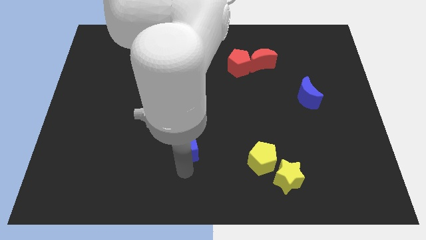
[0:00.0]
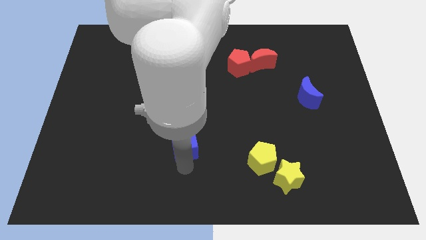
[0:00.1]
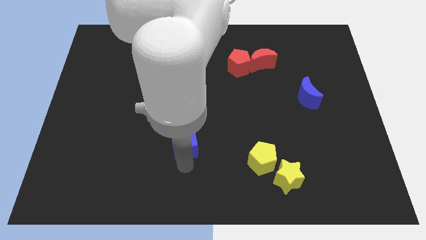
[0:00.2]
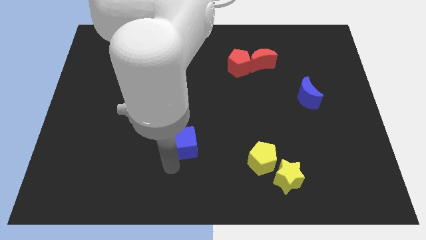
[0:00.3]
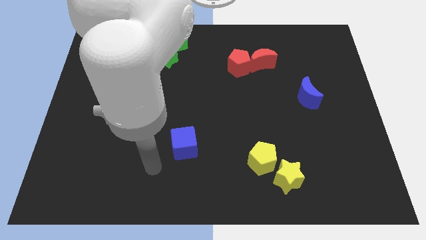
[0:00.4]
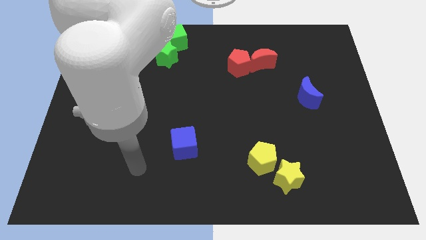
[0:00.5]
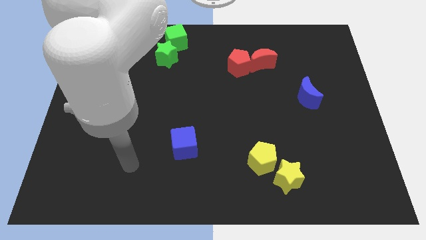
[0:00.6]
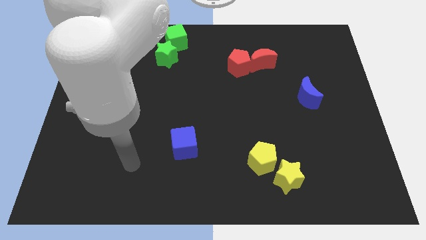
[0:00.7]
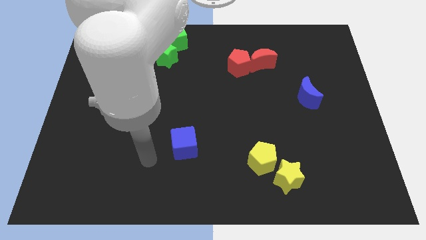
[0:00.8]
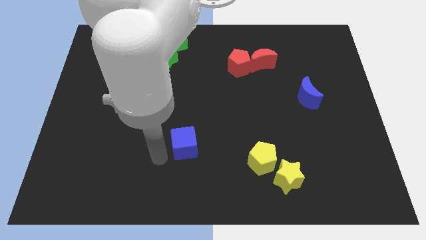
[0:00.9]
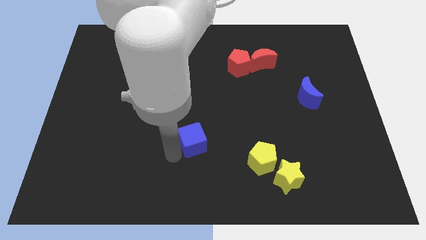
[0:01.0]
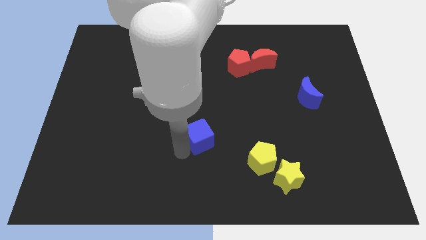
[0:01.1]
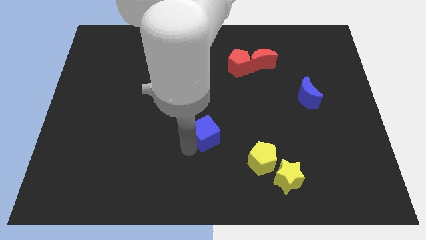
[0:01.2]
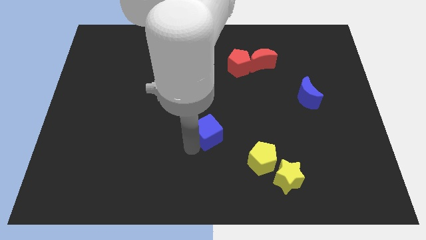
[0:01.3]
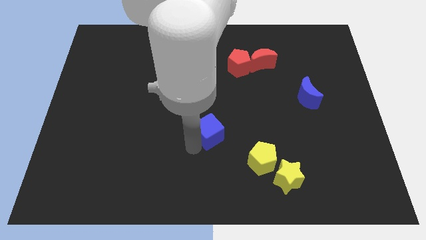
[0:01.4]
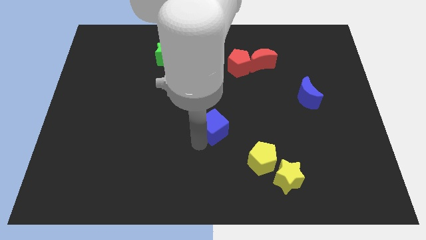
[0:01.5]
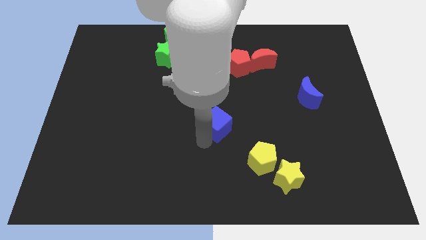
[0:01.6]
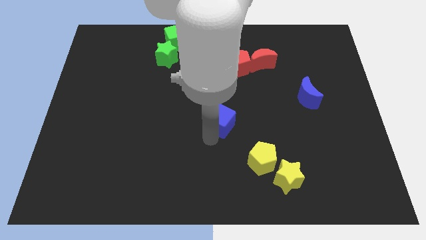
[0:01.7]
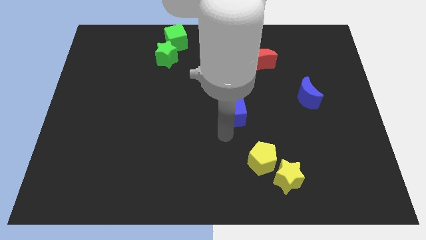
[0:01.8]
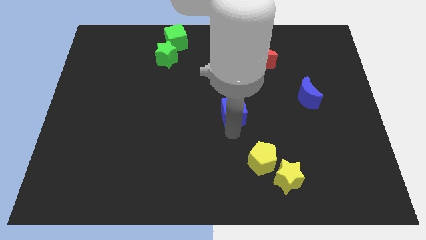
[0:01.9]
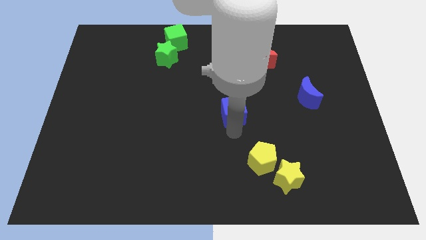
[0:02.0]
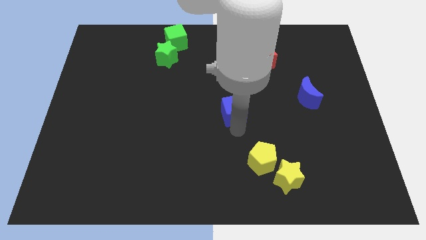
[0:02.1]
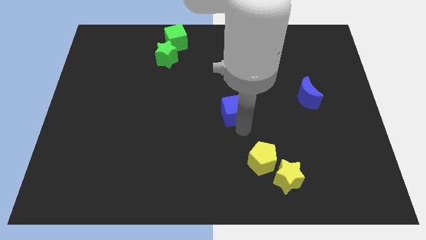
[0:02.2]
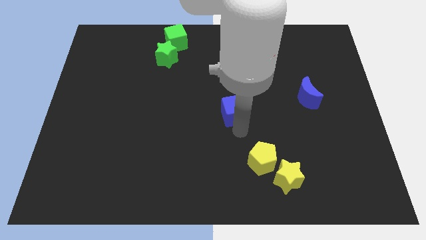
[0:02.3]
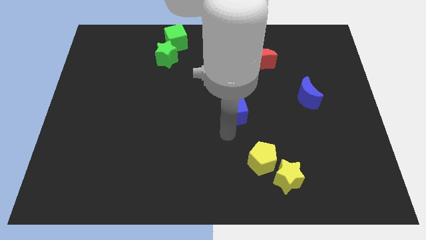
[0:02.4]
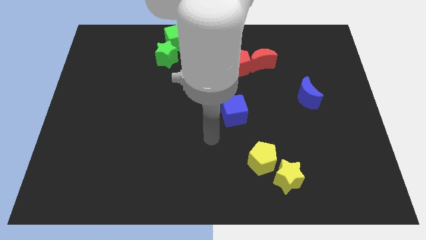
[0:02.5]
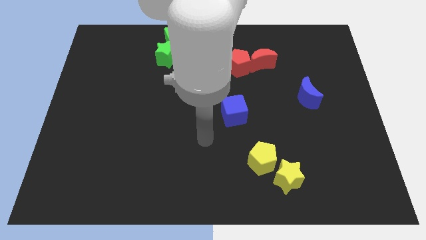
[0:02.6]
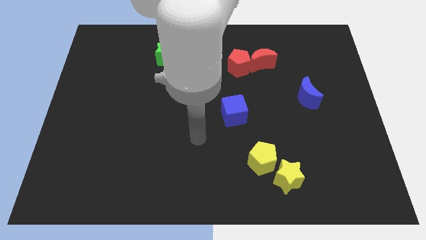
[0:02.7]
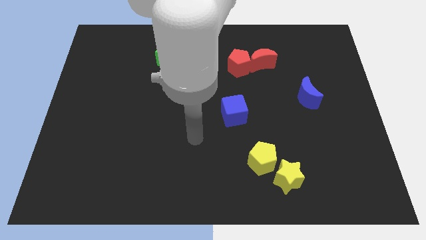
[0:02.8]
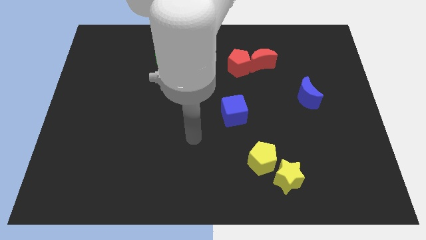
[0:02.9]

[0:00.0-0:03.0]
drag the blue cube to the right

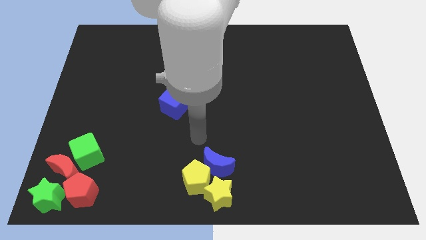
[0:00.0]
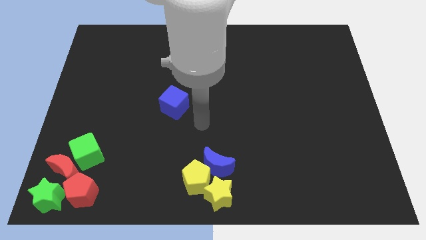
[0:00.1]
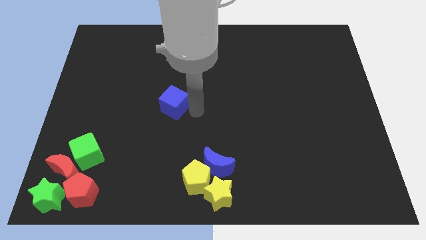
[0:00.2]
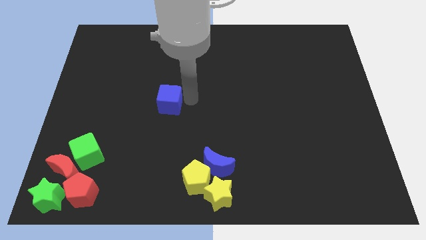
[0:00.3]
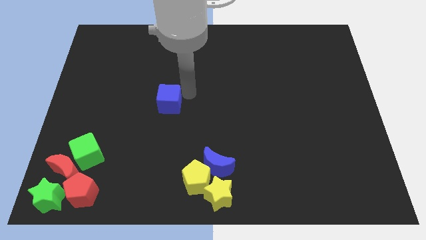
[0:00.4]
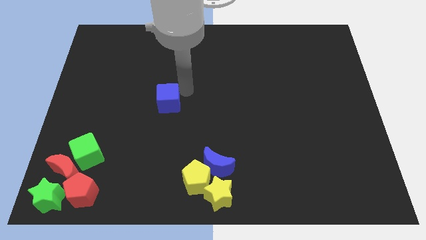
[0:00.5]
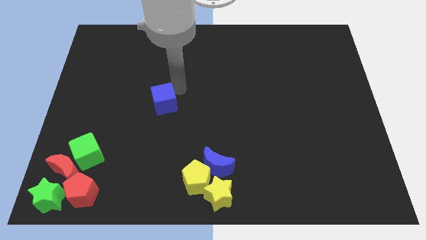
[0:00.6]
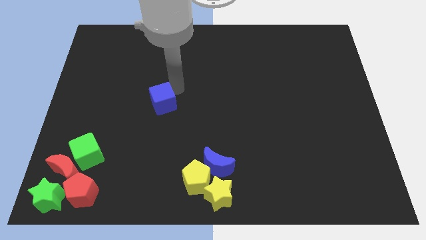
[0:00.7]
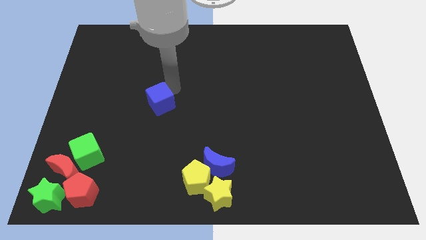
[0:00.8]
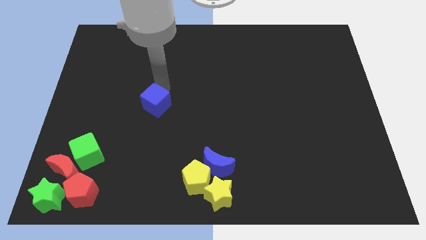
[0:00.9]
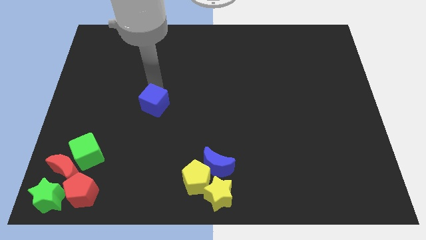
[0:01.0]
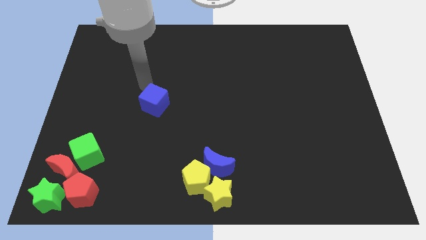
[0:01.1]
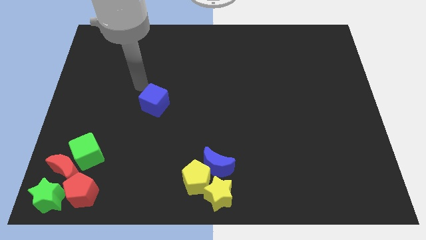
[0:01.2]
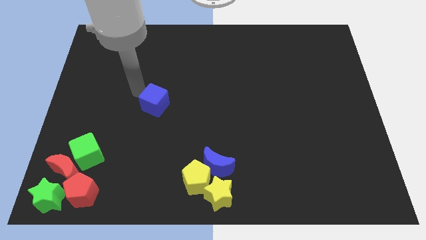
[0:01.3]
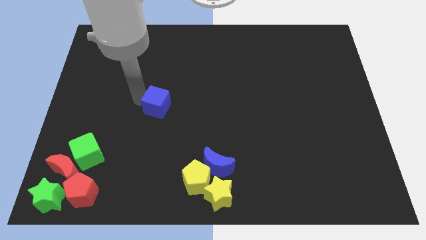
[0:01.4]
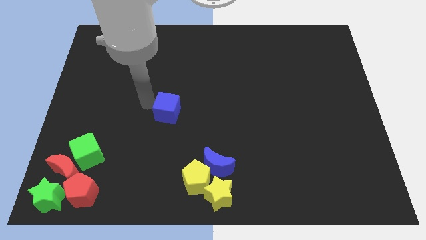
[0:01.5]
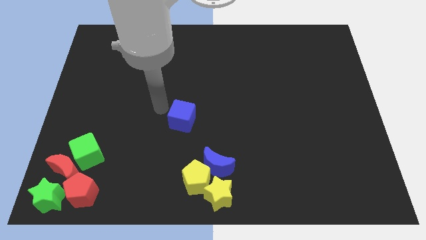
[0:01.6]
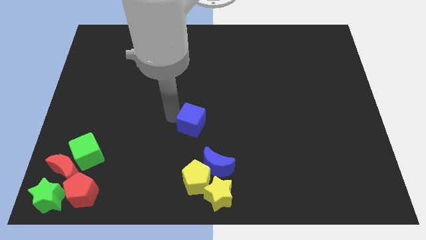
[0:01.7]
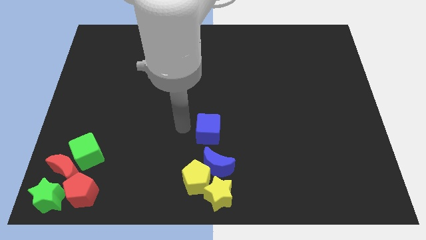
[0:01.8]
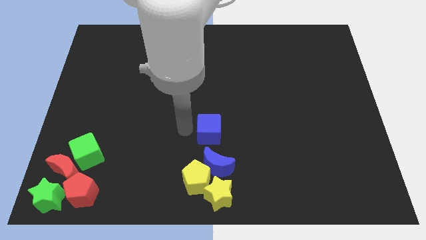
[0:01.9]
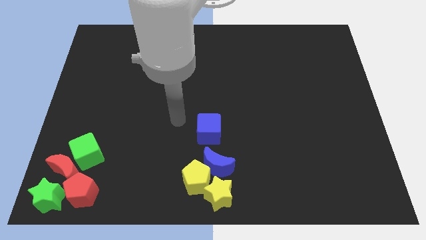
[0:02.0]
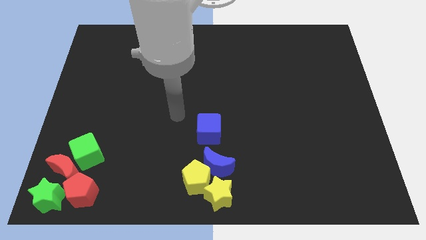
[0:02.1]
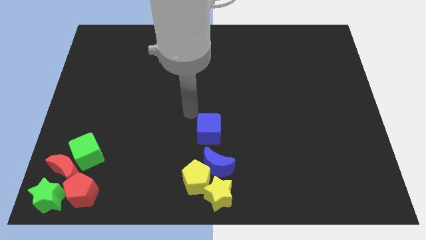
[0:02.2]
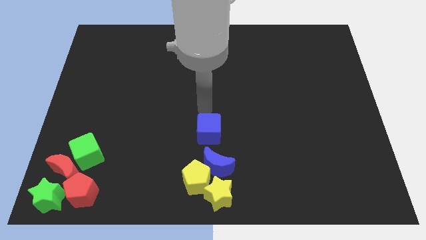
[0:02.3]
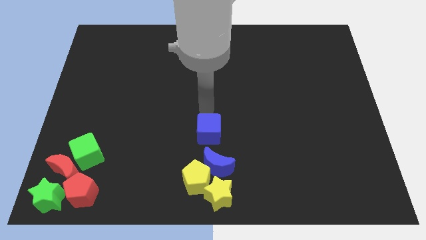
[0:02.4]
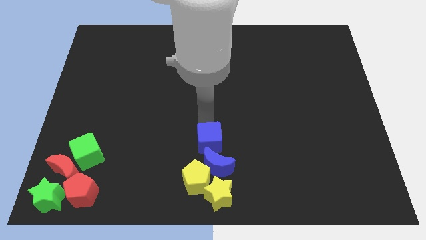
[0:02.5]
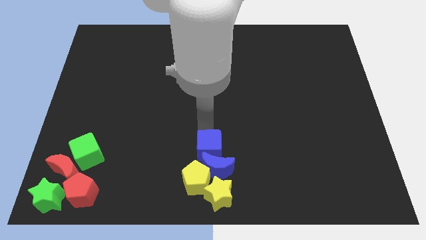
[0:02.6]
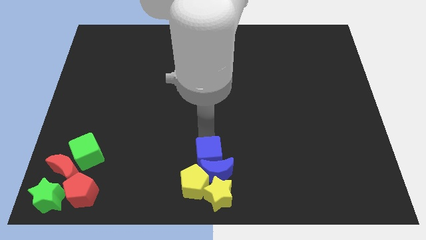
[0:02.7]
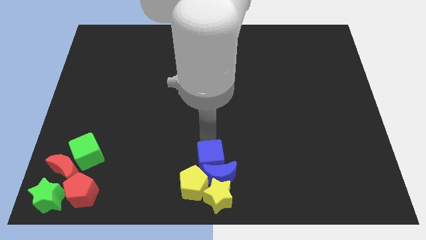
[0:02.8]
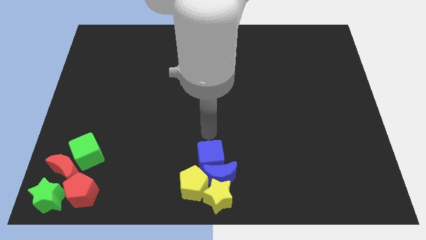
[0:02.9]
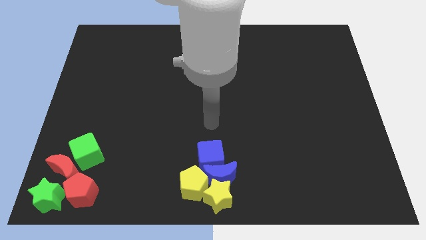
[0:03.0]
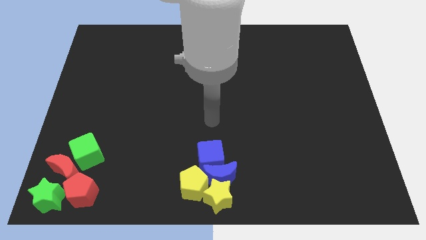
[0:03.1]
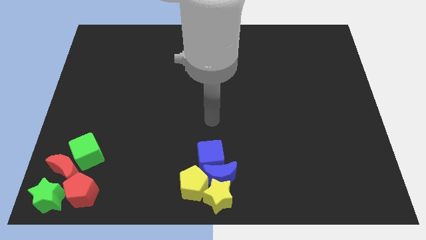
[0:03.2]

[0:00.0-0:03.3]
push the blue cube into the group of blocks

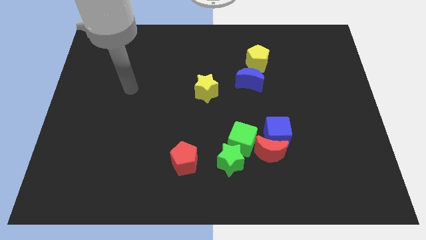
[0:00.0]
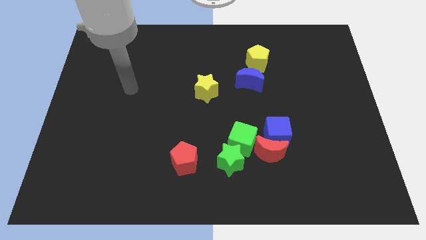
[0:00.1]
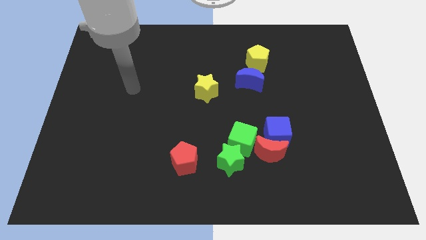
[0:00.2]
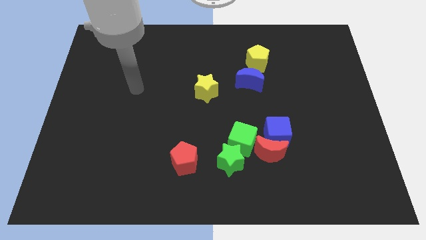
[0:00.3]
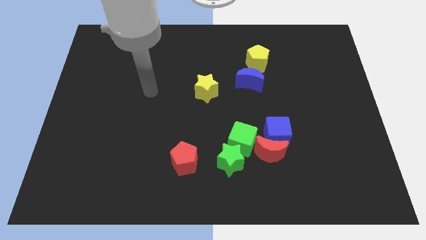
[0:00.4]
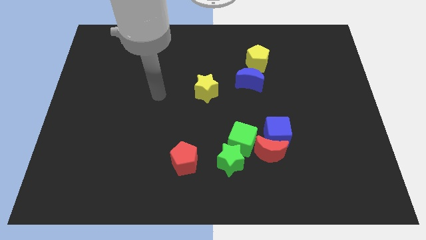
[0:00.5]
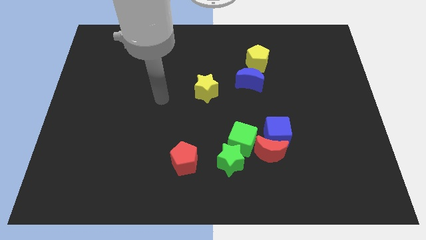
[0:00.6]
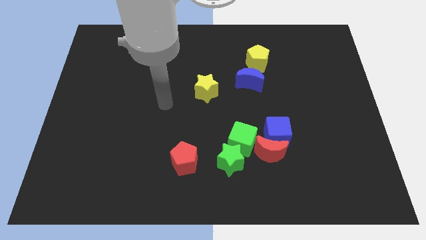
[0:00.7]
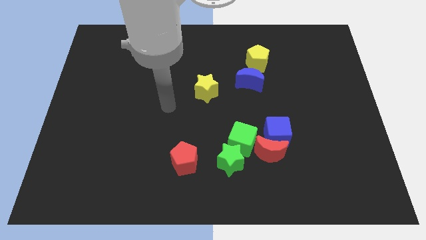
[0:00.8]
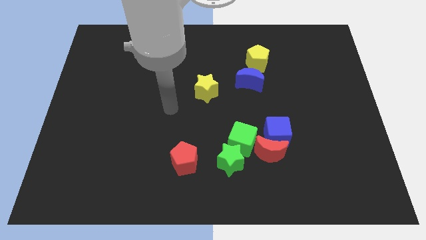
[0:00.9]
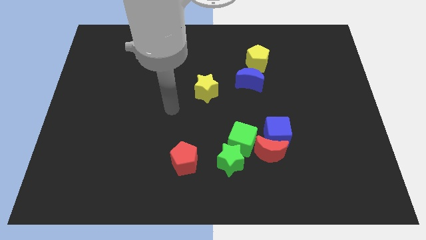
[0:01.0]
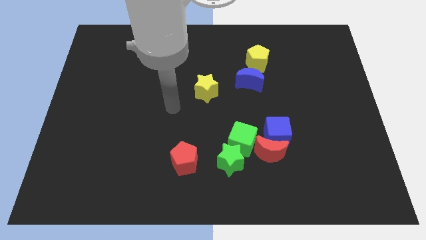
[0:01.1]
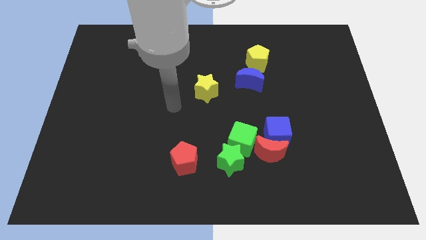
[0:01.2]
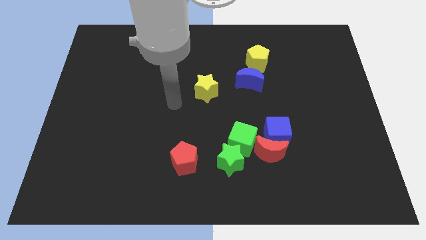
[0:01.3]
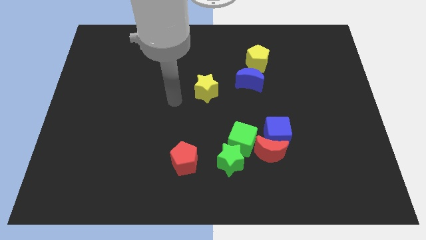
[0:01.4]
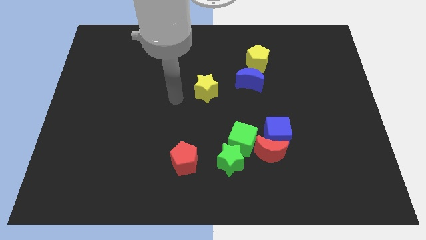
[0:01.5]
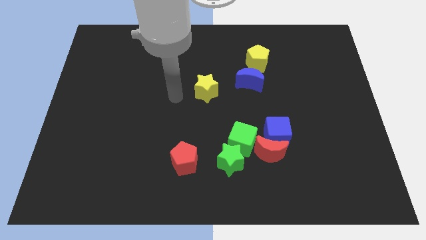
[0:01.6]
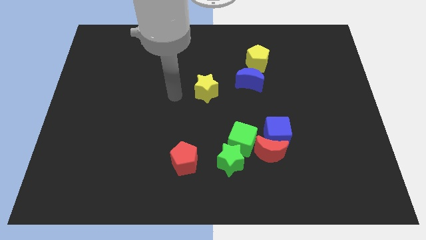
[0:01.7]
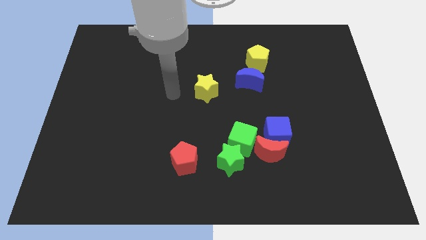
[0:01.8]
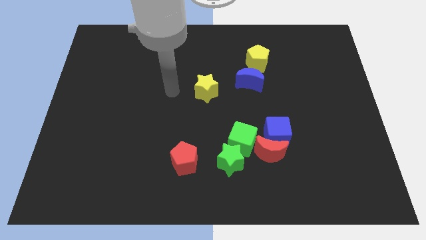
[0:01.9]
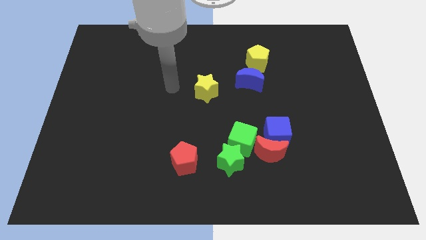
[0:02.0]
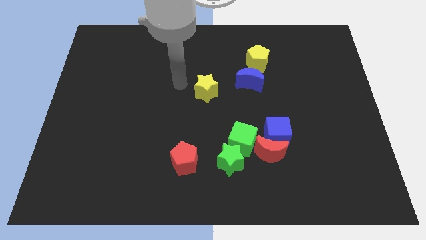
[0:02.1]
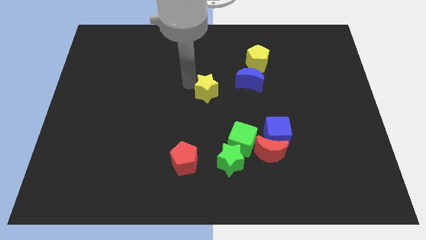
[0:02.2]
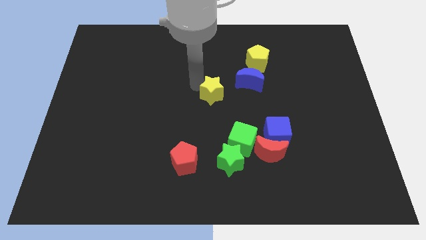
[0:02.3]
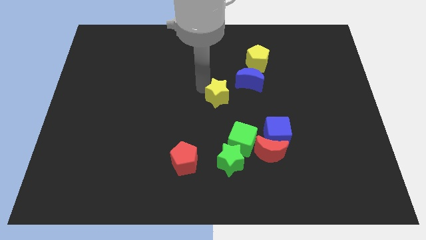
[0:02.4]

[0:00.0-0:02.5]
place the arm left to the yellow star
